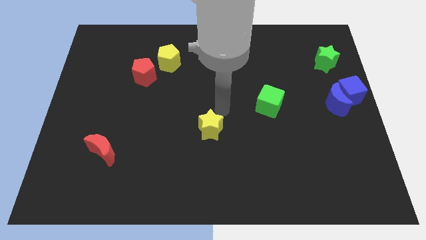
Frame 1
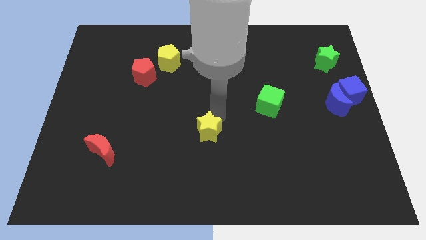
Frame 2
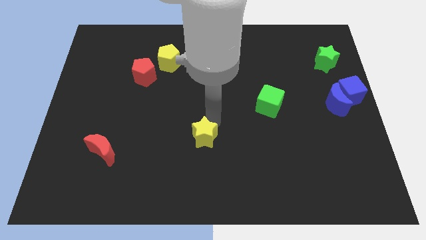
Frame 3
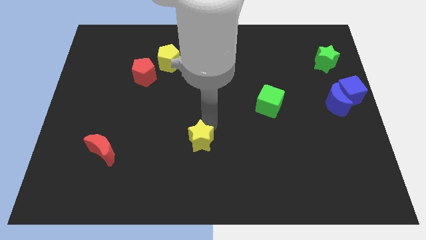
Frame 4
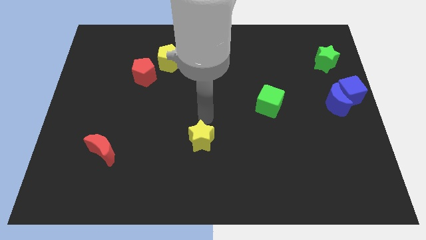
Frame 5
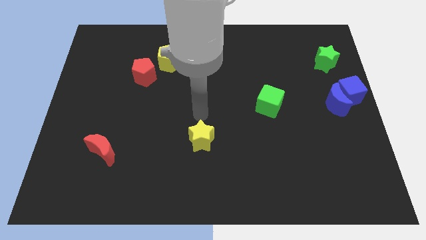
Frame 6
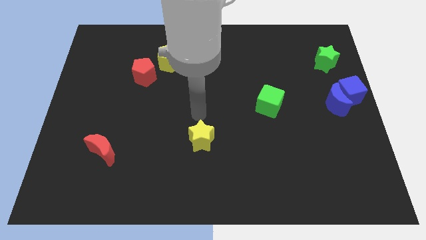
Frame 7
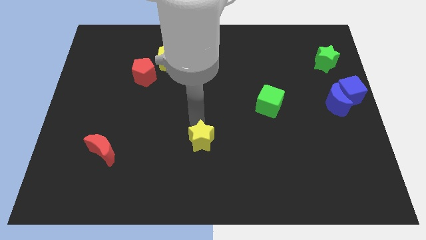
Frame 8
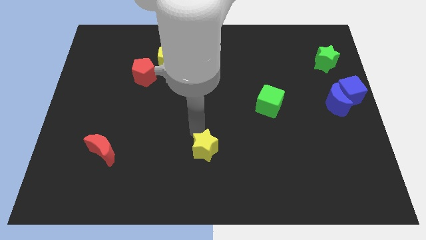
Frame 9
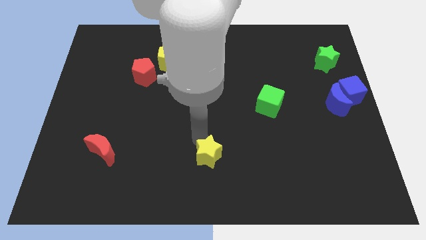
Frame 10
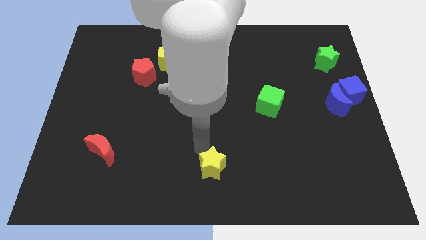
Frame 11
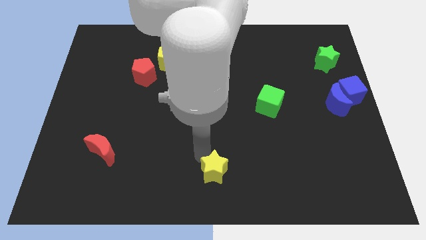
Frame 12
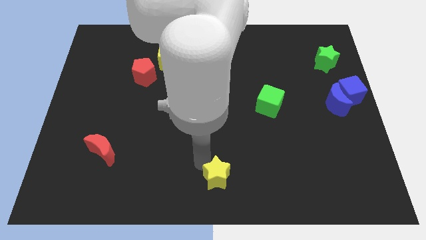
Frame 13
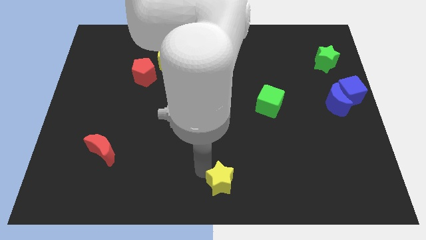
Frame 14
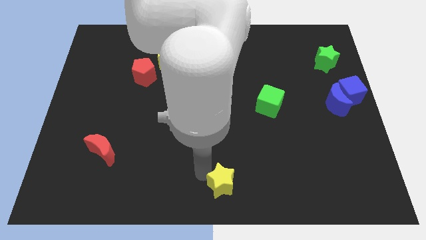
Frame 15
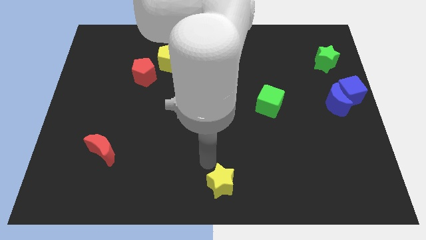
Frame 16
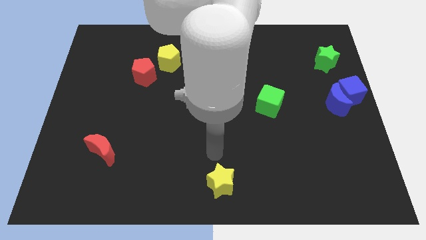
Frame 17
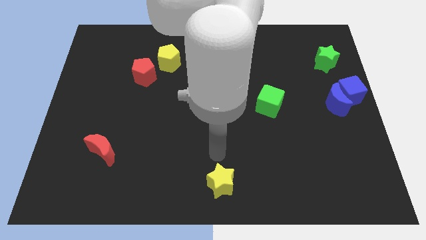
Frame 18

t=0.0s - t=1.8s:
push the yellow star to the bottom center

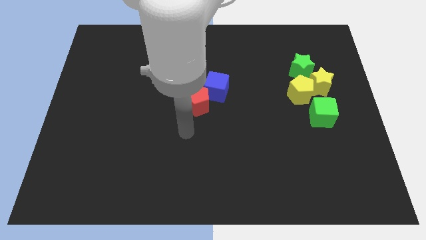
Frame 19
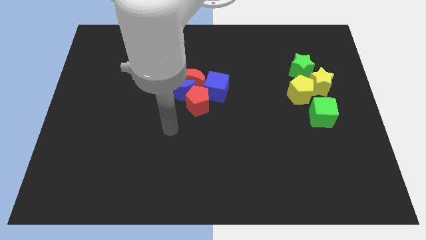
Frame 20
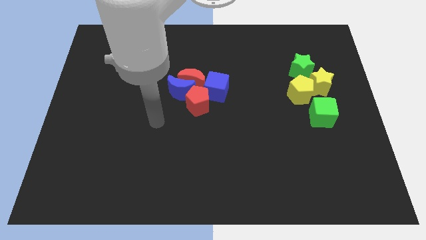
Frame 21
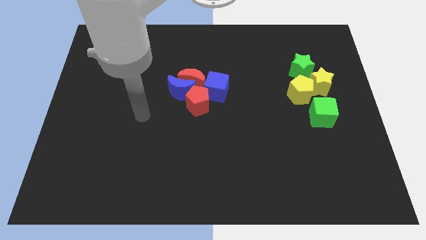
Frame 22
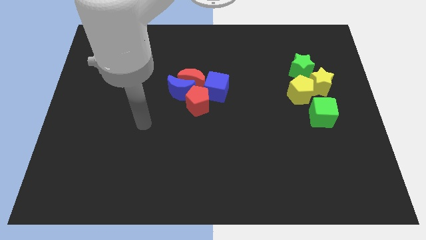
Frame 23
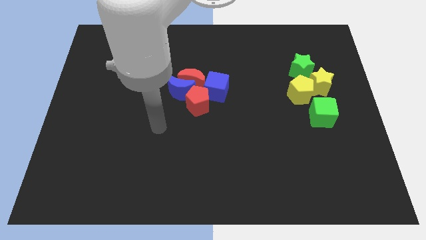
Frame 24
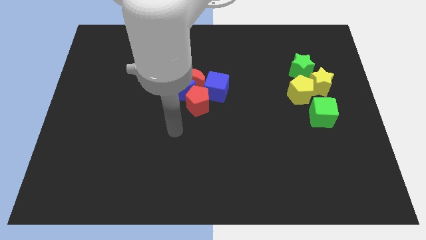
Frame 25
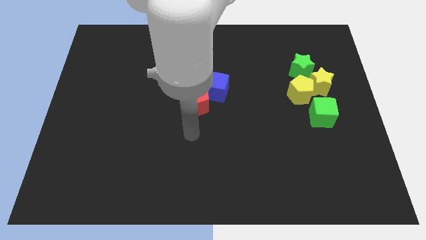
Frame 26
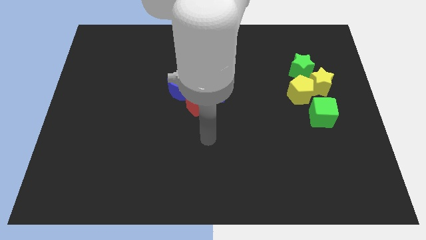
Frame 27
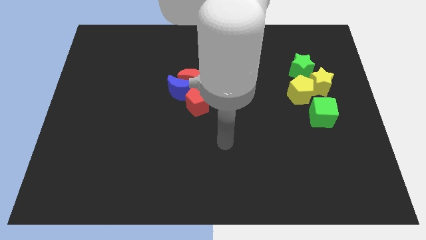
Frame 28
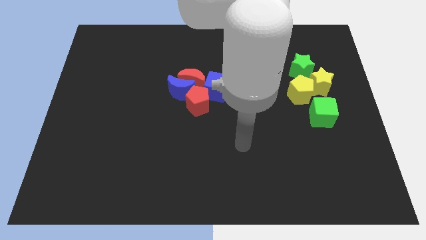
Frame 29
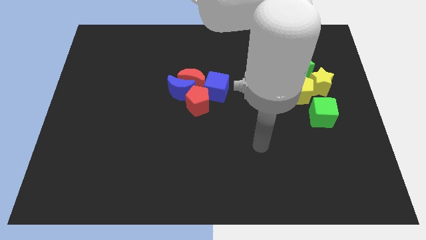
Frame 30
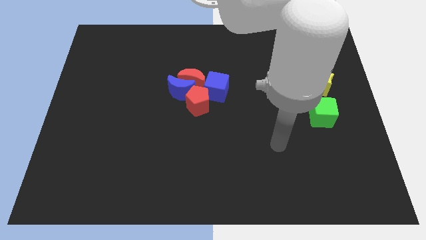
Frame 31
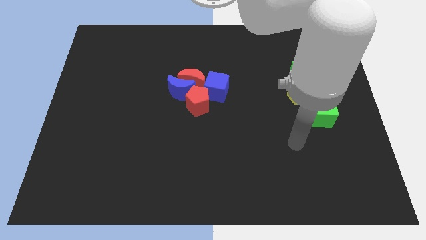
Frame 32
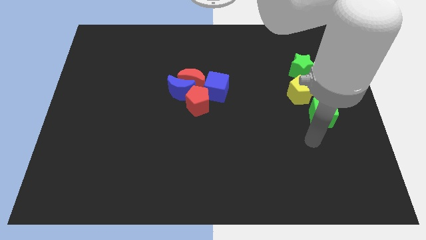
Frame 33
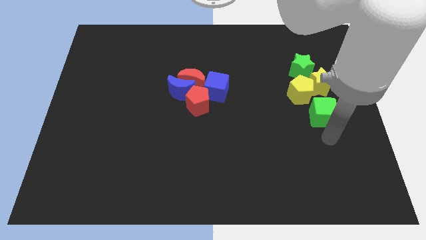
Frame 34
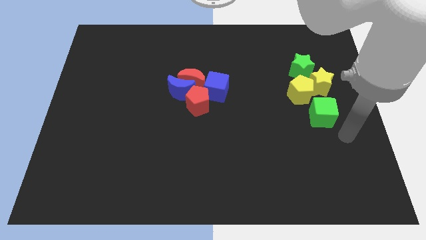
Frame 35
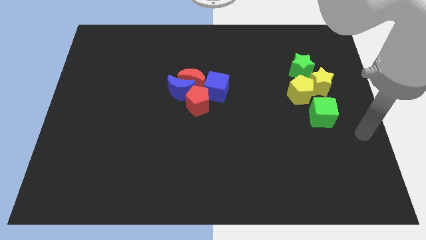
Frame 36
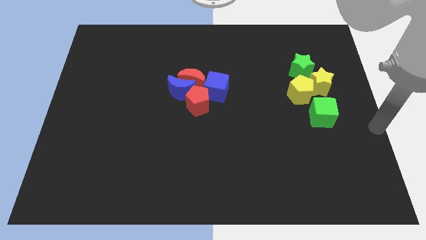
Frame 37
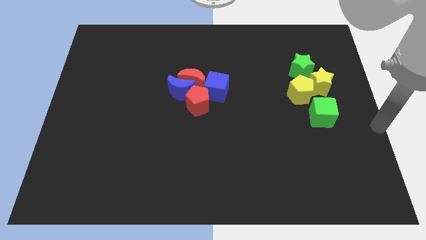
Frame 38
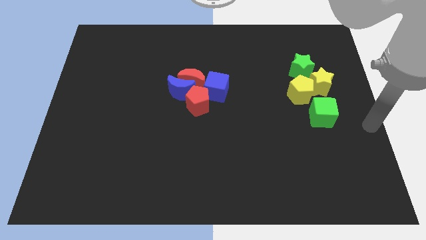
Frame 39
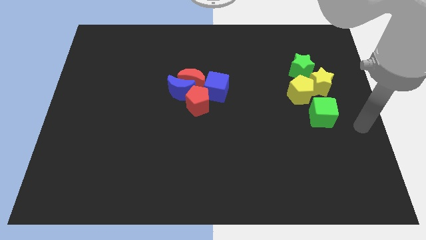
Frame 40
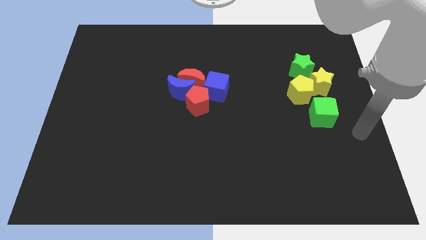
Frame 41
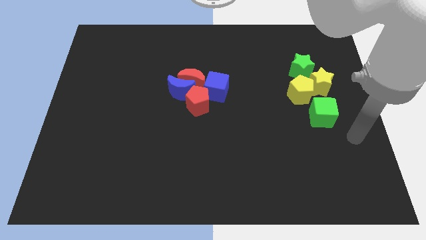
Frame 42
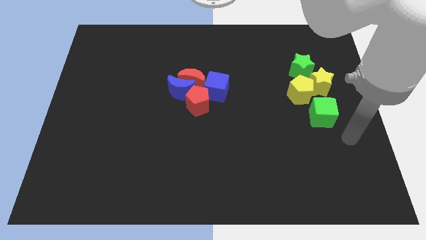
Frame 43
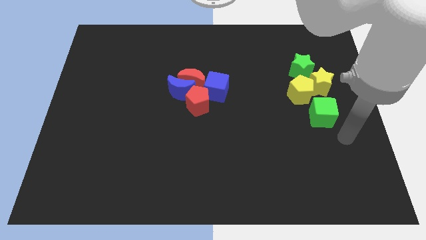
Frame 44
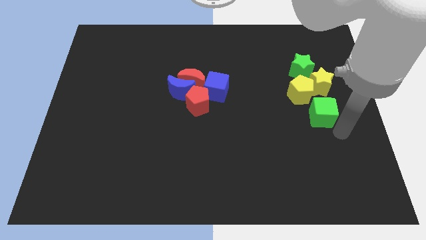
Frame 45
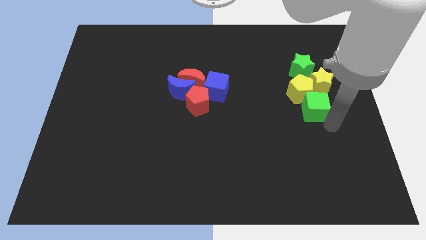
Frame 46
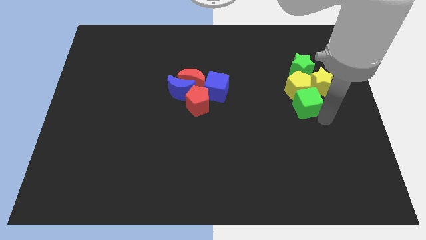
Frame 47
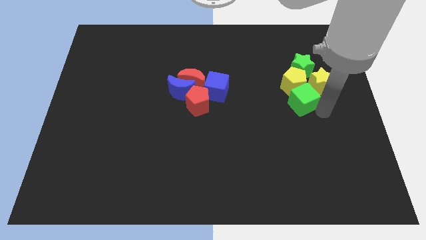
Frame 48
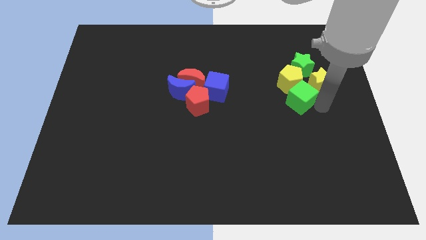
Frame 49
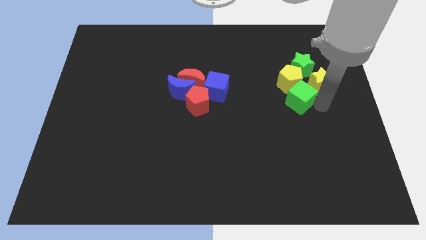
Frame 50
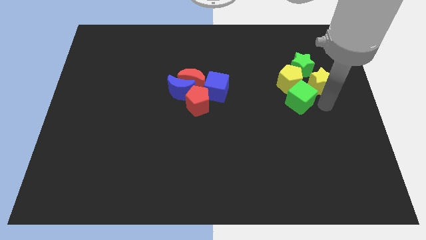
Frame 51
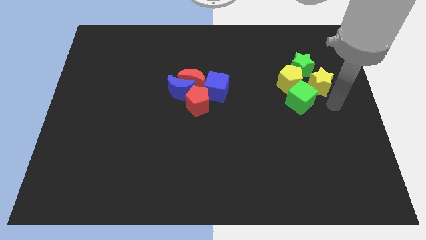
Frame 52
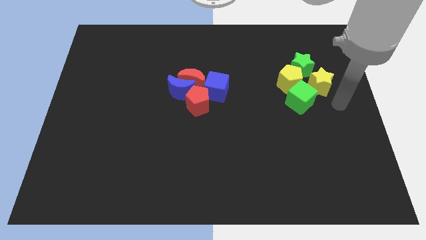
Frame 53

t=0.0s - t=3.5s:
push the green cube into the yellow pentagon

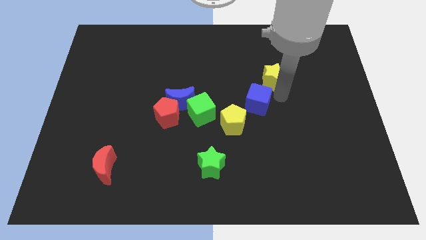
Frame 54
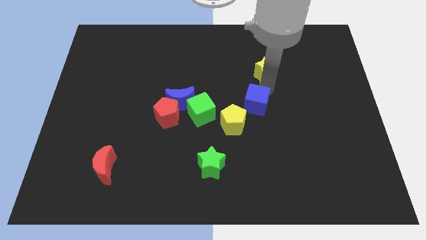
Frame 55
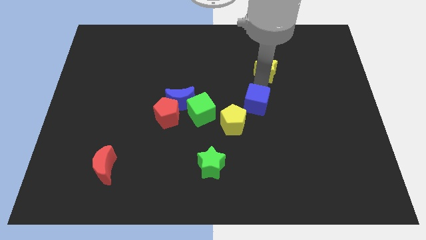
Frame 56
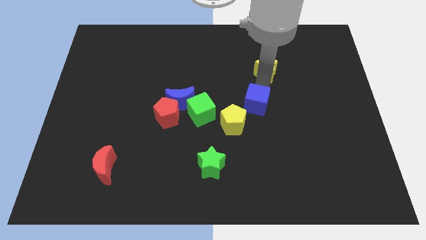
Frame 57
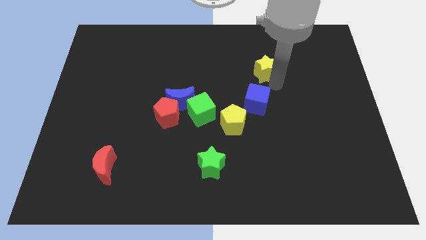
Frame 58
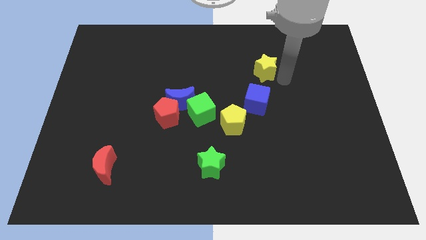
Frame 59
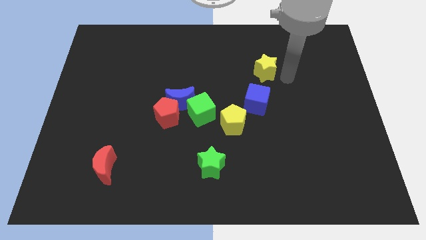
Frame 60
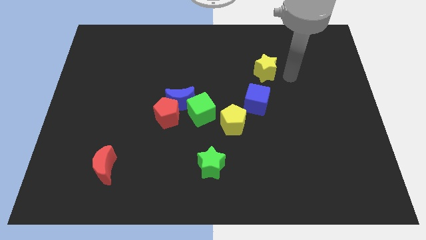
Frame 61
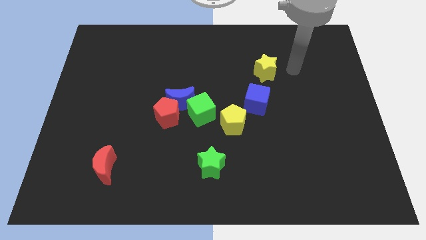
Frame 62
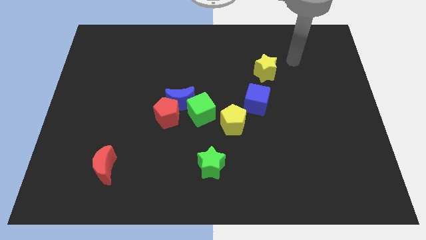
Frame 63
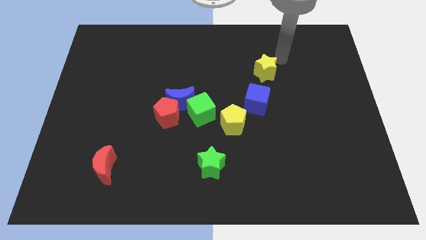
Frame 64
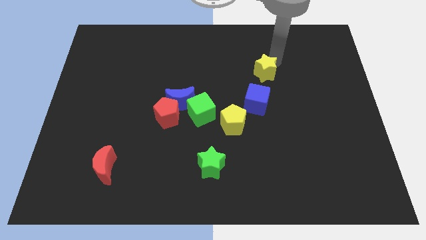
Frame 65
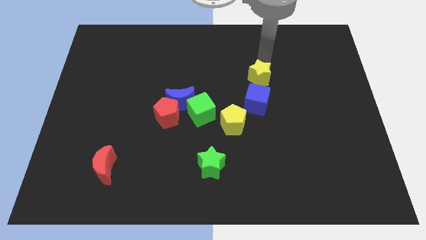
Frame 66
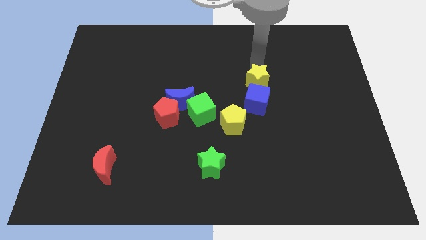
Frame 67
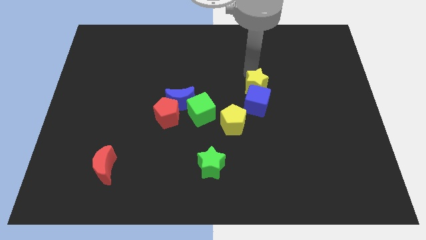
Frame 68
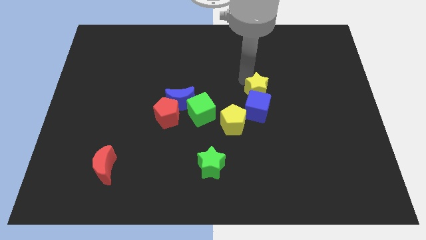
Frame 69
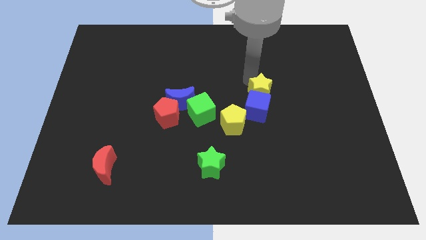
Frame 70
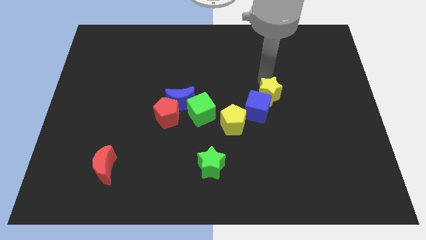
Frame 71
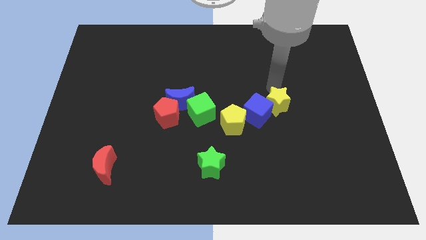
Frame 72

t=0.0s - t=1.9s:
push the yellow star into the blue cube

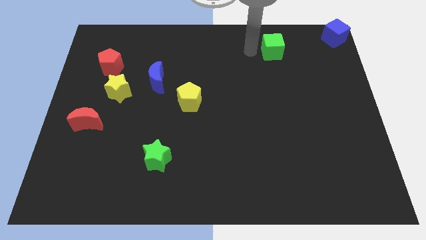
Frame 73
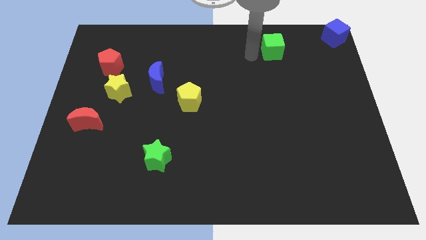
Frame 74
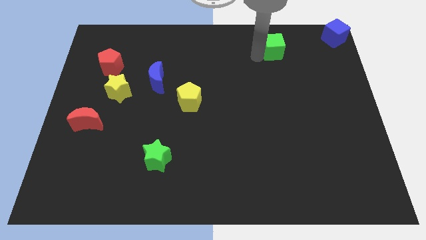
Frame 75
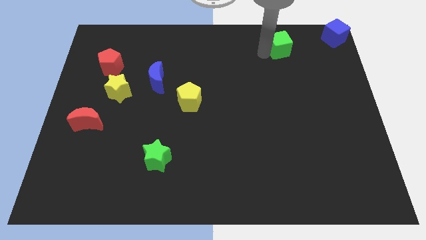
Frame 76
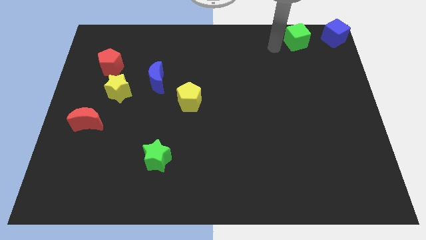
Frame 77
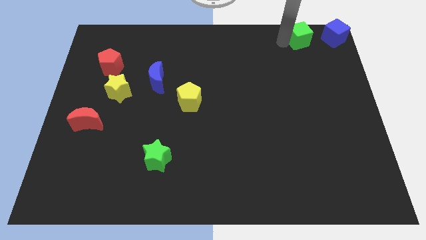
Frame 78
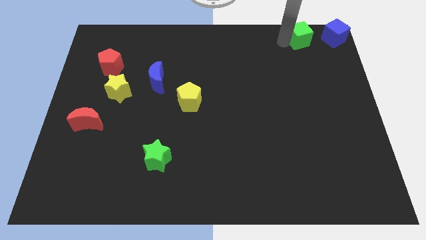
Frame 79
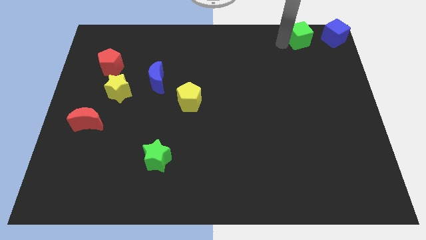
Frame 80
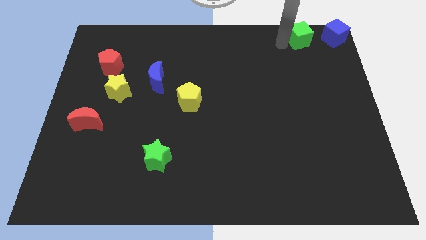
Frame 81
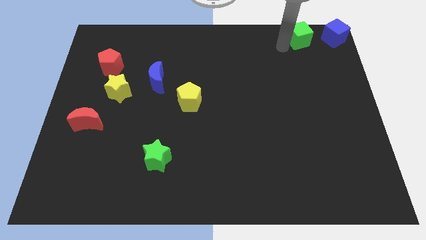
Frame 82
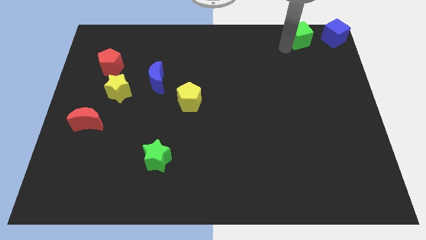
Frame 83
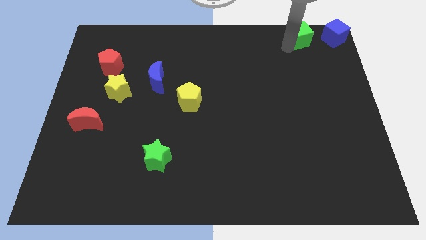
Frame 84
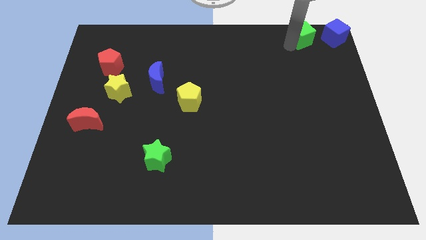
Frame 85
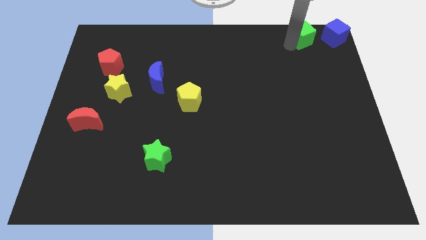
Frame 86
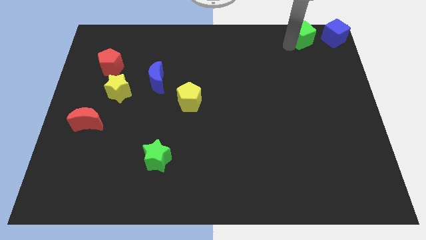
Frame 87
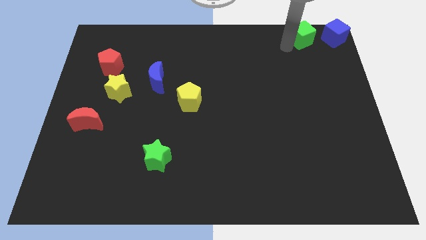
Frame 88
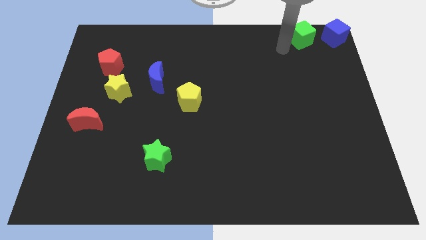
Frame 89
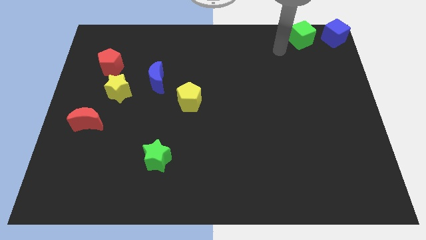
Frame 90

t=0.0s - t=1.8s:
place the green cube to the left side of the blue cube
